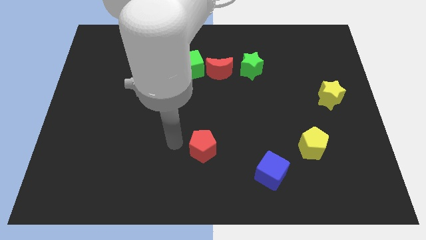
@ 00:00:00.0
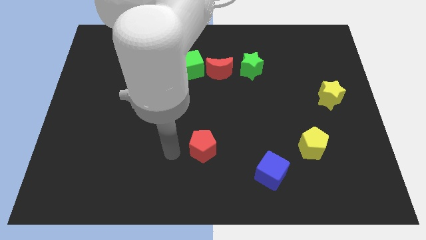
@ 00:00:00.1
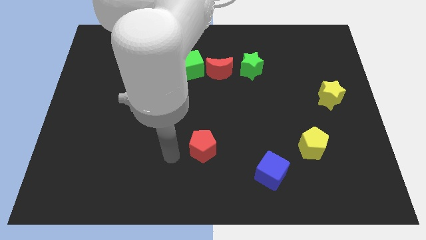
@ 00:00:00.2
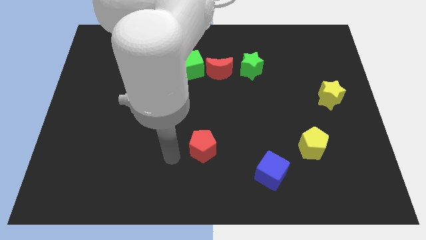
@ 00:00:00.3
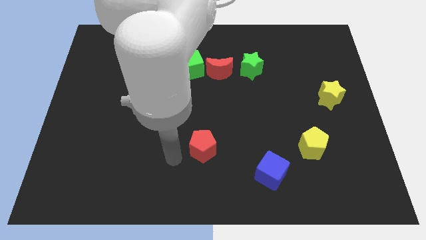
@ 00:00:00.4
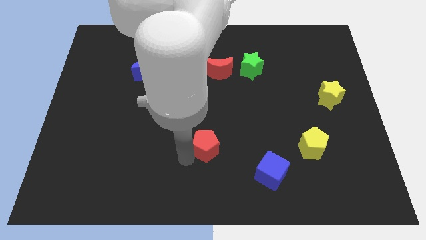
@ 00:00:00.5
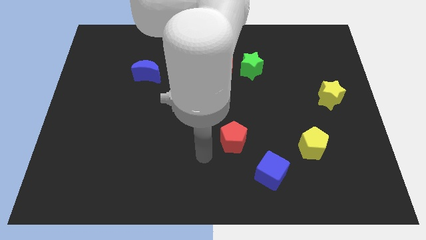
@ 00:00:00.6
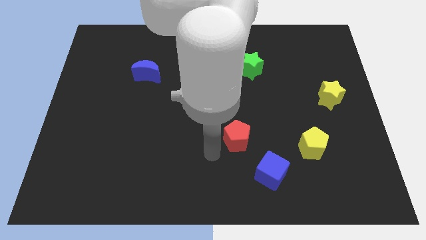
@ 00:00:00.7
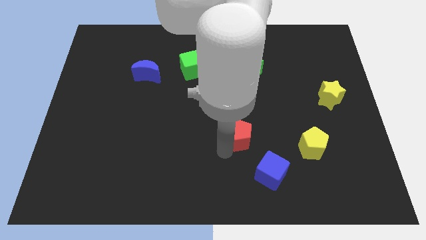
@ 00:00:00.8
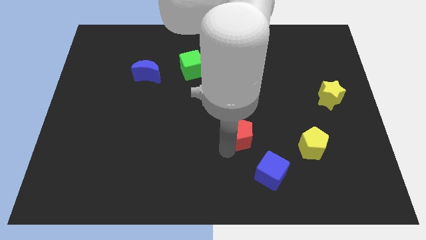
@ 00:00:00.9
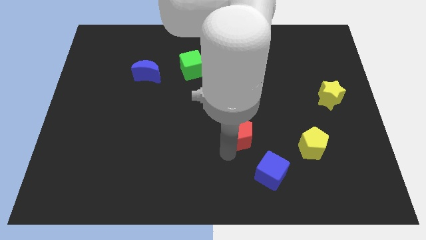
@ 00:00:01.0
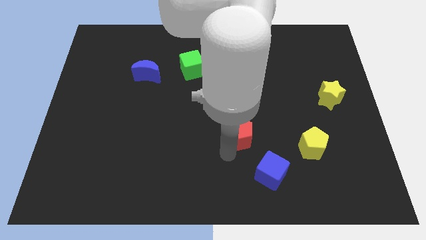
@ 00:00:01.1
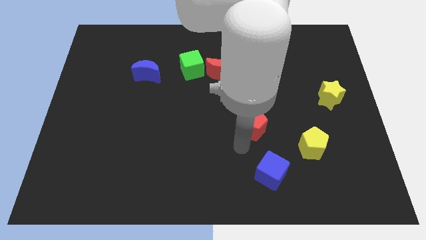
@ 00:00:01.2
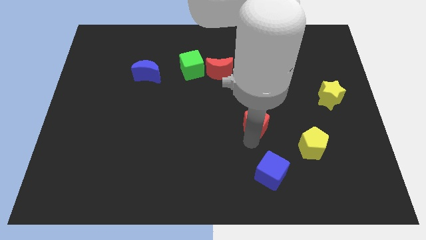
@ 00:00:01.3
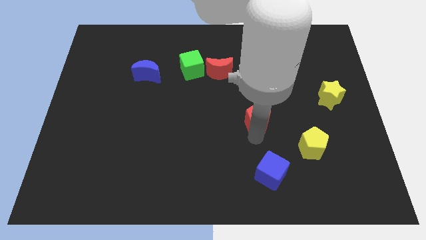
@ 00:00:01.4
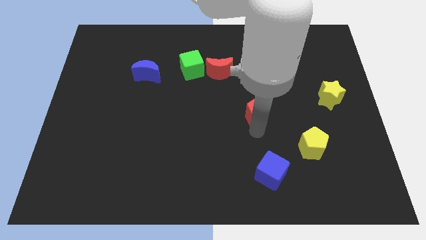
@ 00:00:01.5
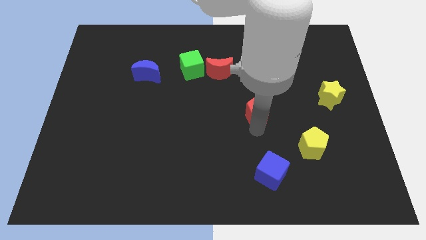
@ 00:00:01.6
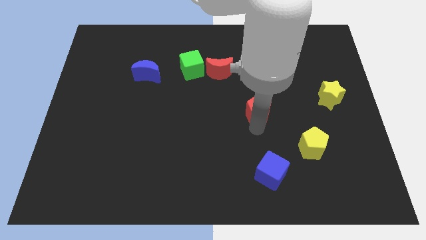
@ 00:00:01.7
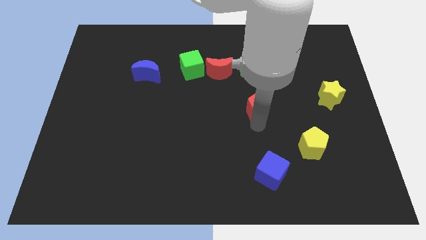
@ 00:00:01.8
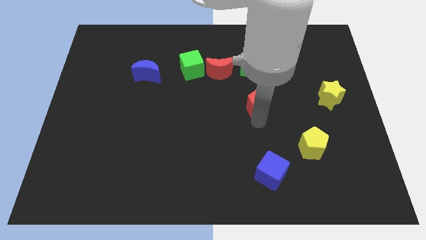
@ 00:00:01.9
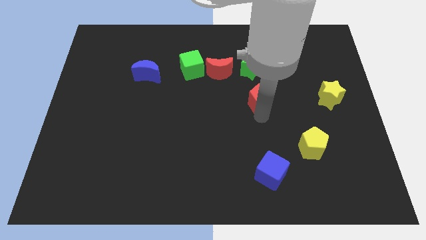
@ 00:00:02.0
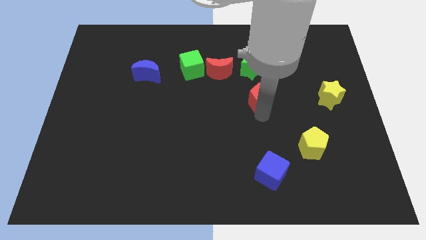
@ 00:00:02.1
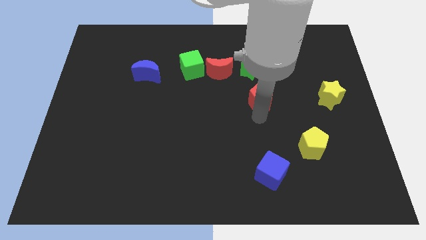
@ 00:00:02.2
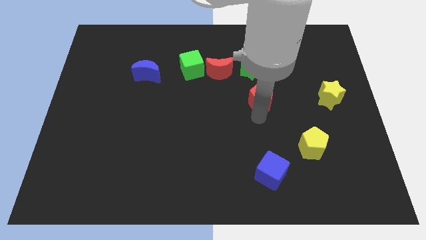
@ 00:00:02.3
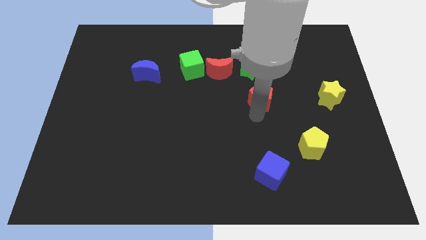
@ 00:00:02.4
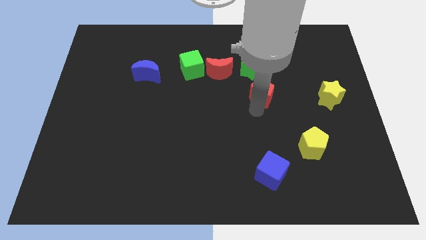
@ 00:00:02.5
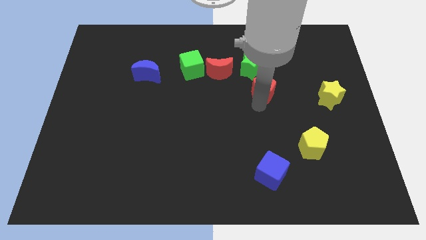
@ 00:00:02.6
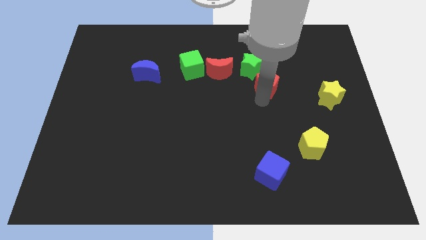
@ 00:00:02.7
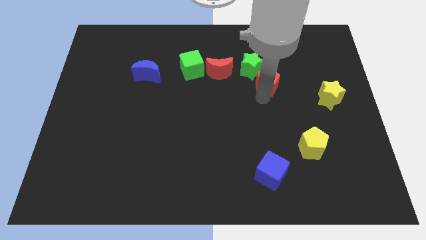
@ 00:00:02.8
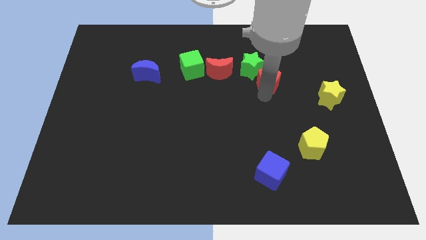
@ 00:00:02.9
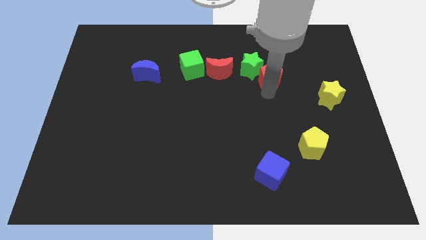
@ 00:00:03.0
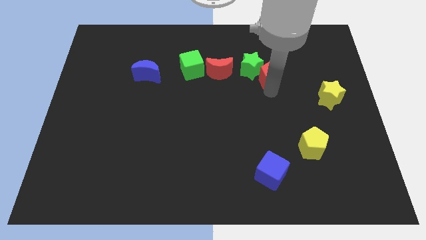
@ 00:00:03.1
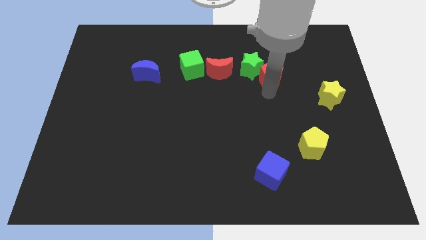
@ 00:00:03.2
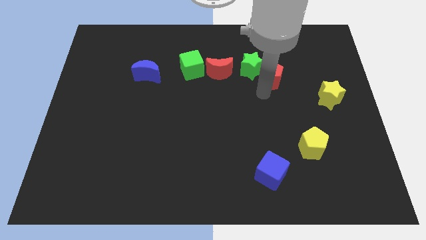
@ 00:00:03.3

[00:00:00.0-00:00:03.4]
drag the red pentagon towards the green star

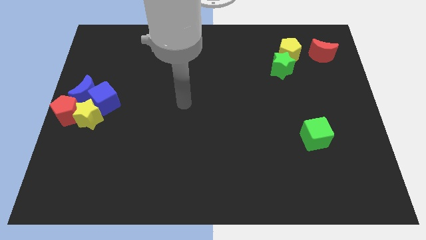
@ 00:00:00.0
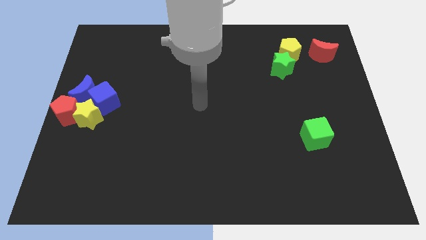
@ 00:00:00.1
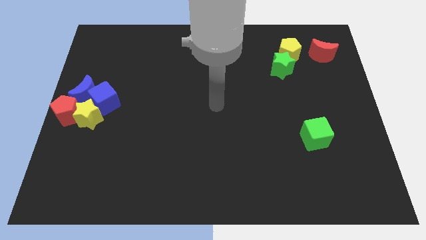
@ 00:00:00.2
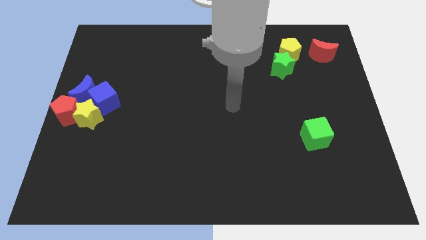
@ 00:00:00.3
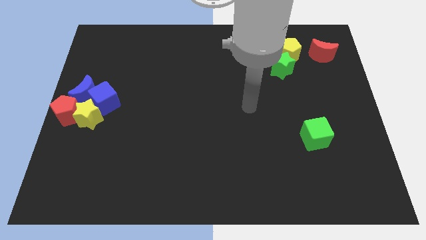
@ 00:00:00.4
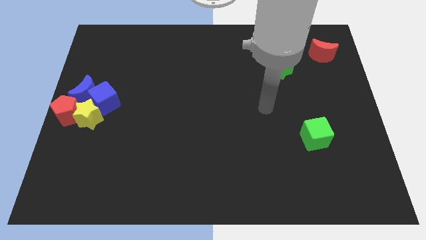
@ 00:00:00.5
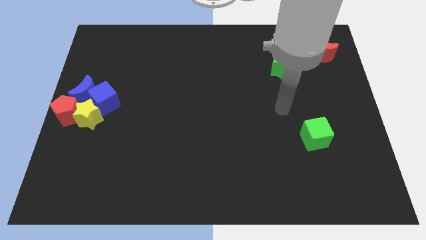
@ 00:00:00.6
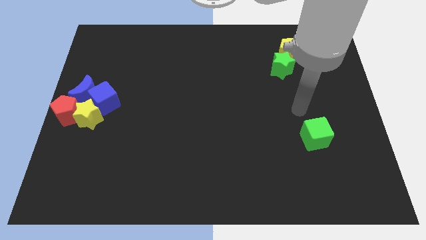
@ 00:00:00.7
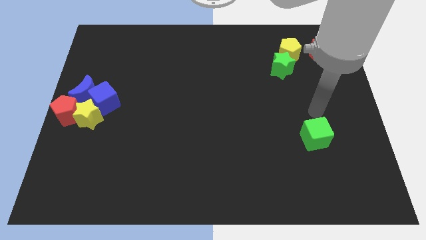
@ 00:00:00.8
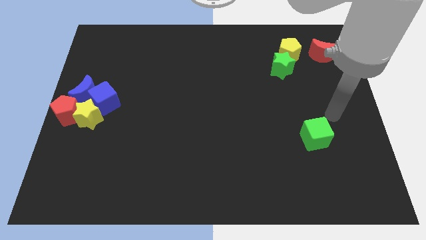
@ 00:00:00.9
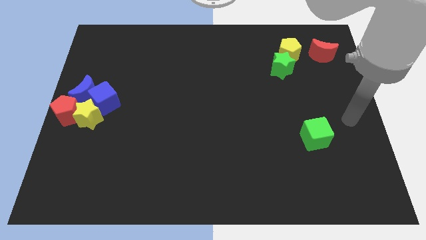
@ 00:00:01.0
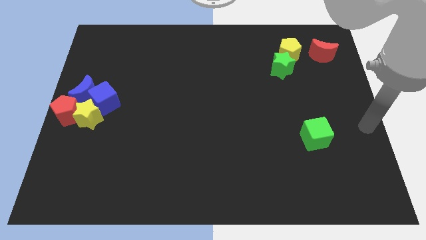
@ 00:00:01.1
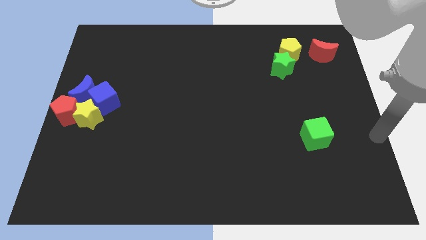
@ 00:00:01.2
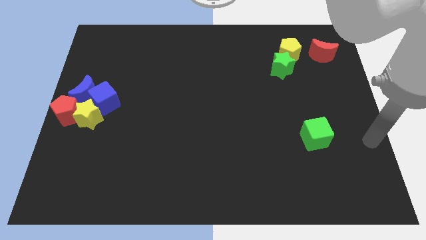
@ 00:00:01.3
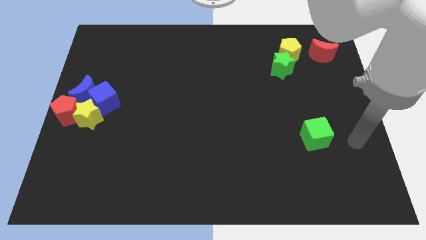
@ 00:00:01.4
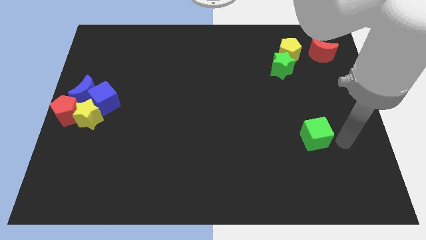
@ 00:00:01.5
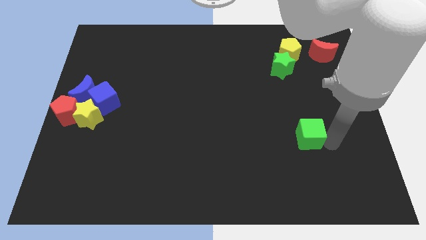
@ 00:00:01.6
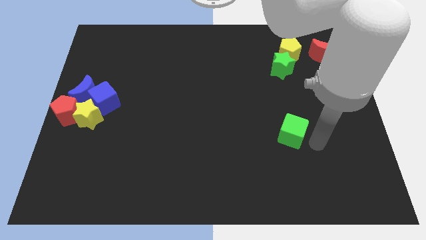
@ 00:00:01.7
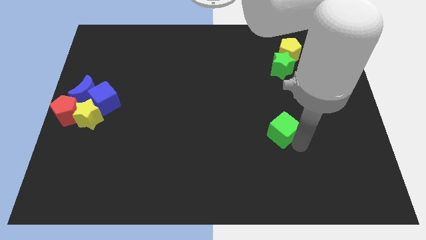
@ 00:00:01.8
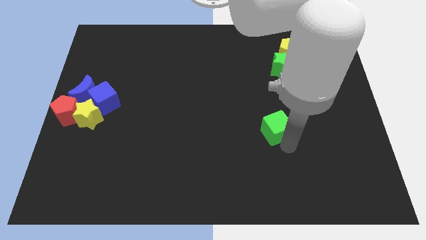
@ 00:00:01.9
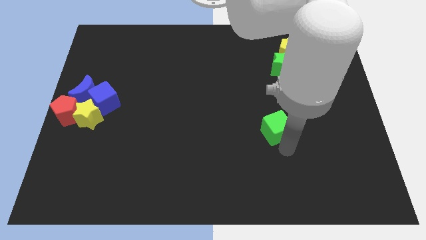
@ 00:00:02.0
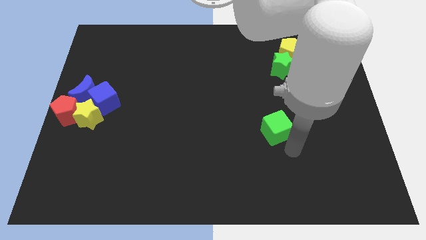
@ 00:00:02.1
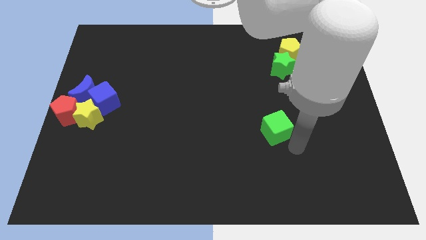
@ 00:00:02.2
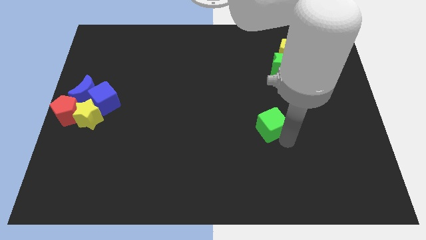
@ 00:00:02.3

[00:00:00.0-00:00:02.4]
push green cube towards center

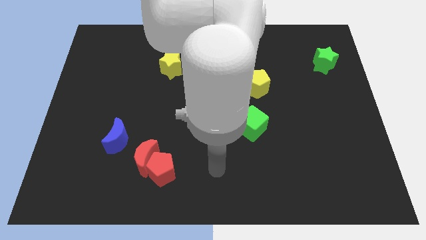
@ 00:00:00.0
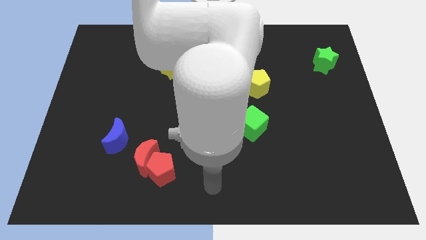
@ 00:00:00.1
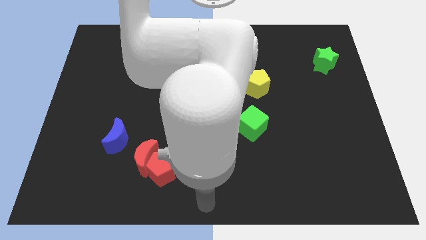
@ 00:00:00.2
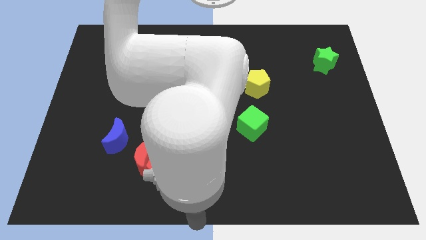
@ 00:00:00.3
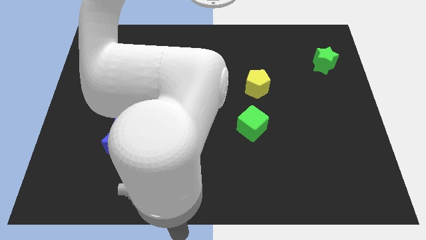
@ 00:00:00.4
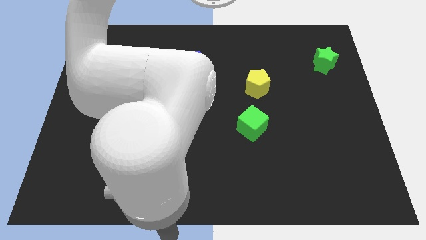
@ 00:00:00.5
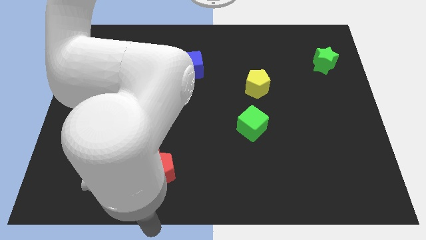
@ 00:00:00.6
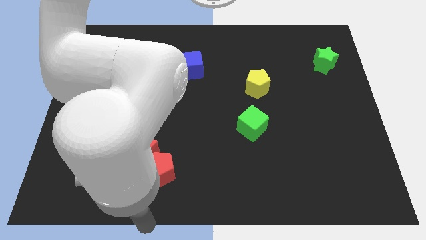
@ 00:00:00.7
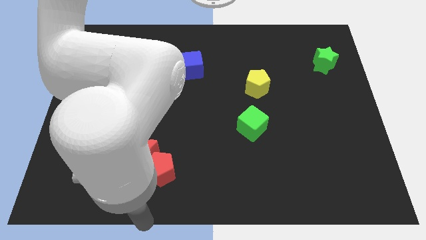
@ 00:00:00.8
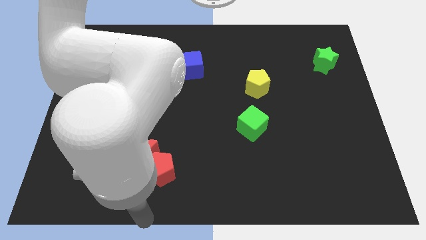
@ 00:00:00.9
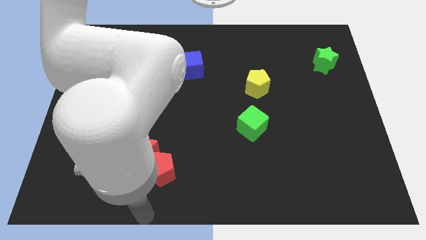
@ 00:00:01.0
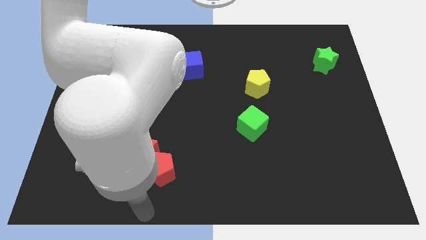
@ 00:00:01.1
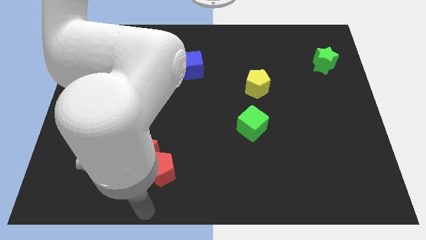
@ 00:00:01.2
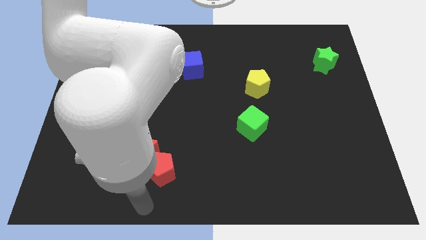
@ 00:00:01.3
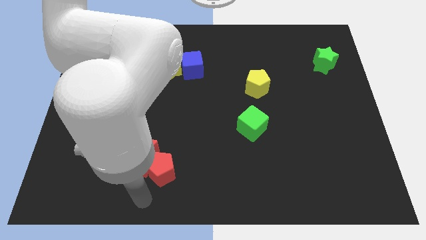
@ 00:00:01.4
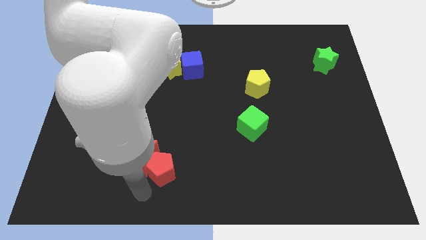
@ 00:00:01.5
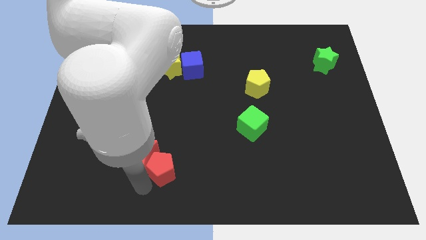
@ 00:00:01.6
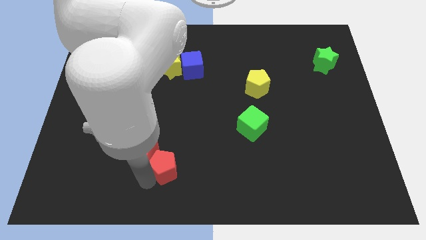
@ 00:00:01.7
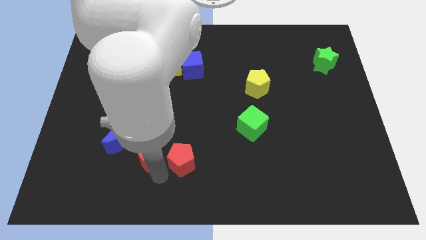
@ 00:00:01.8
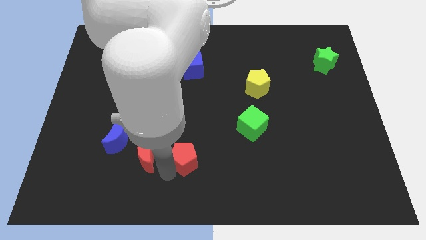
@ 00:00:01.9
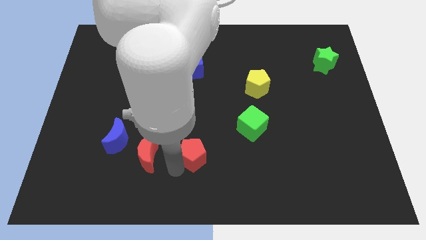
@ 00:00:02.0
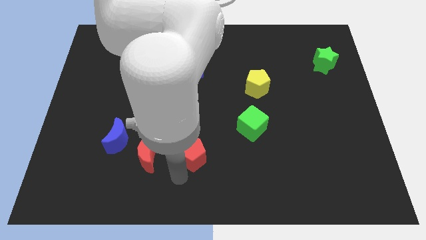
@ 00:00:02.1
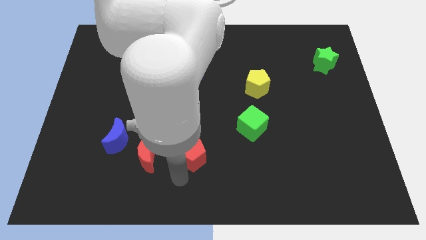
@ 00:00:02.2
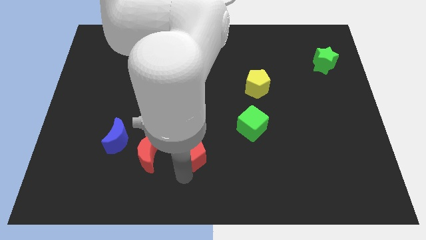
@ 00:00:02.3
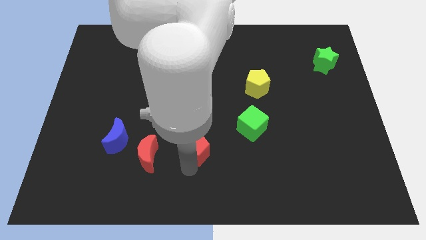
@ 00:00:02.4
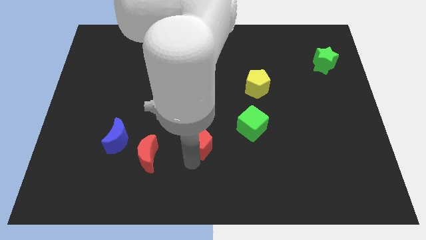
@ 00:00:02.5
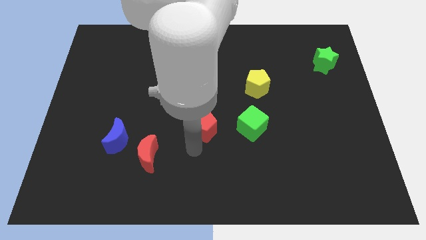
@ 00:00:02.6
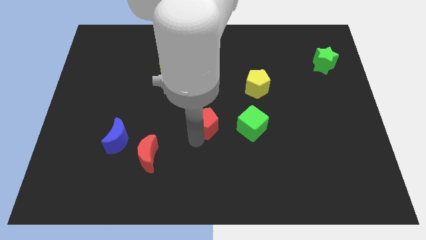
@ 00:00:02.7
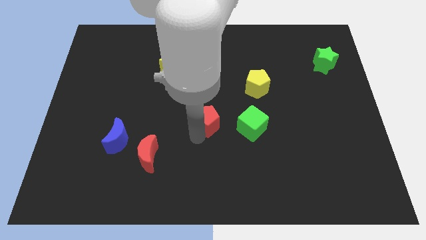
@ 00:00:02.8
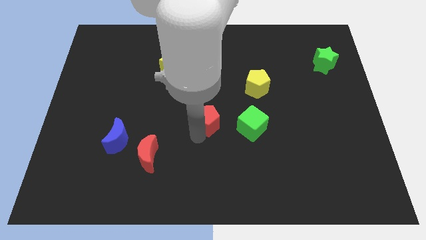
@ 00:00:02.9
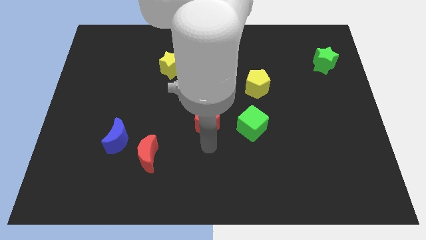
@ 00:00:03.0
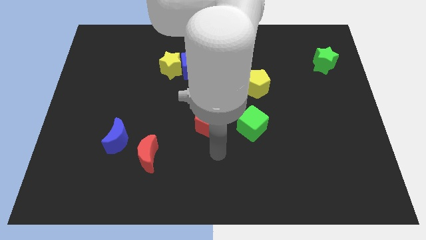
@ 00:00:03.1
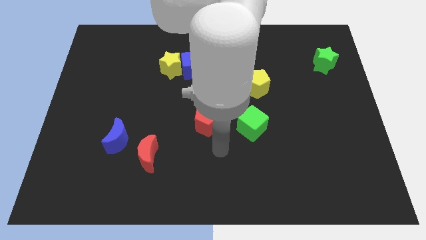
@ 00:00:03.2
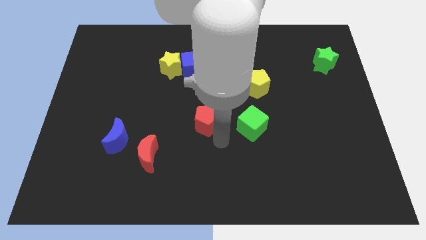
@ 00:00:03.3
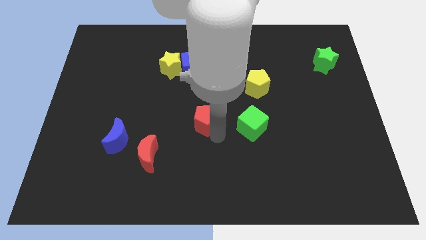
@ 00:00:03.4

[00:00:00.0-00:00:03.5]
move the red pentagon to the left of the green cube
